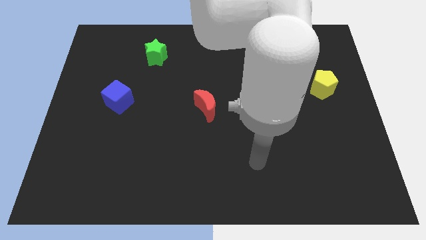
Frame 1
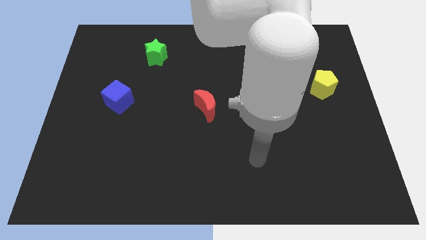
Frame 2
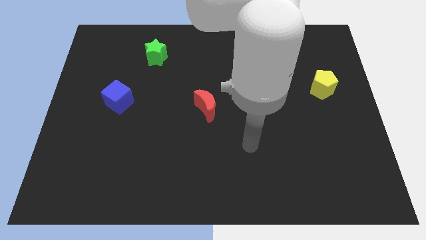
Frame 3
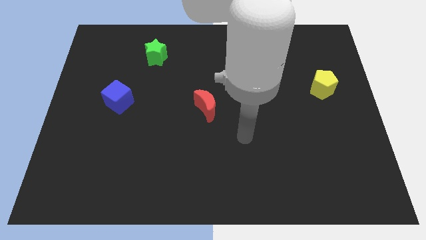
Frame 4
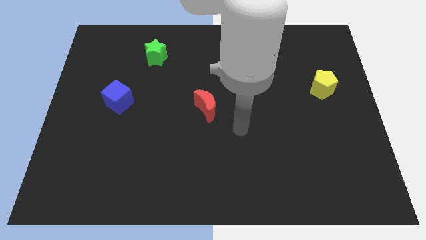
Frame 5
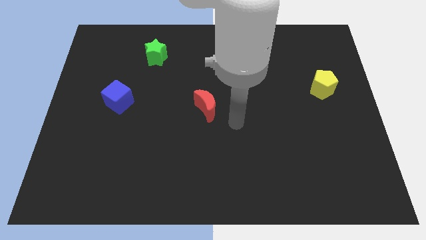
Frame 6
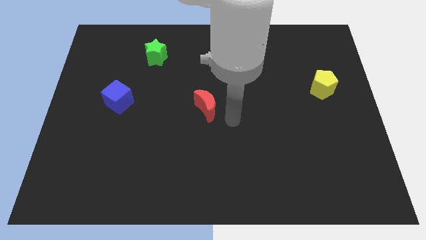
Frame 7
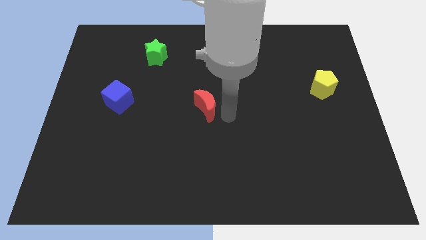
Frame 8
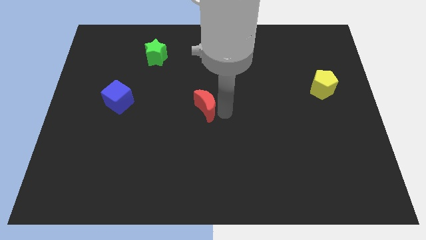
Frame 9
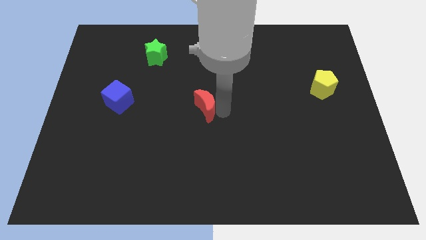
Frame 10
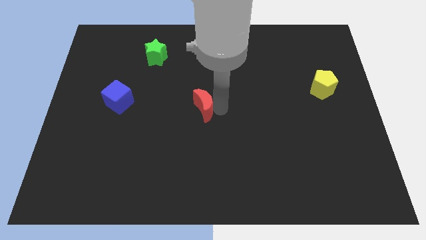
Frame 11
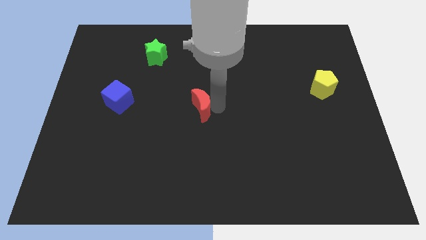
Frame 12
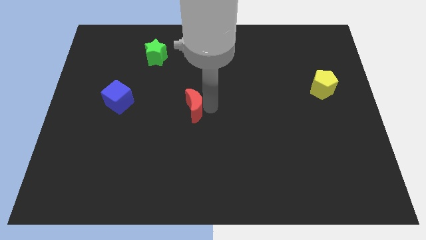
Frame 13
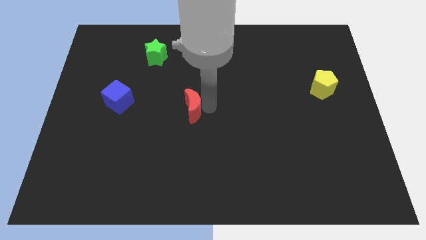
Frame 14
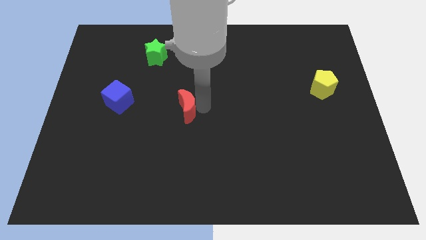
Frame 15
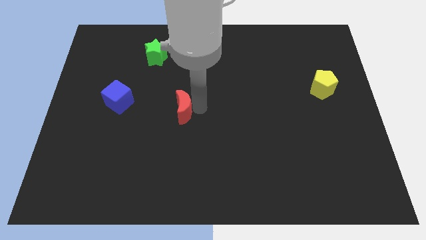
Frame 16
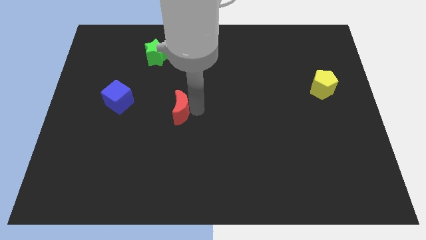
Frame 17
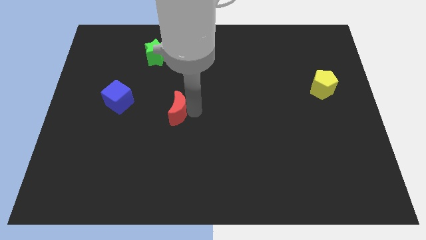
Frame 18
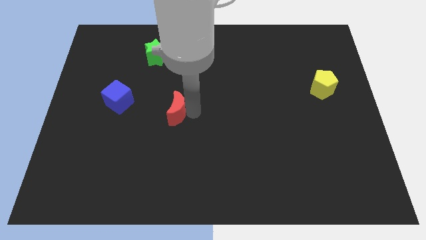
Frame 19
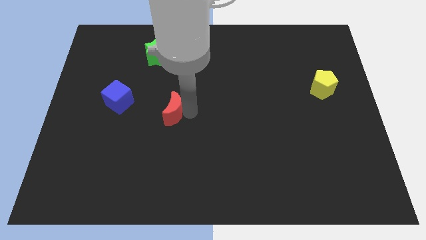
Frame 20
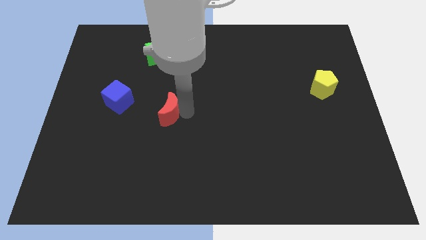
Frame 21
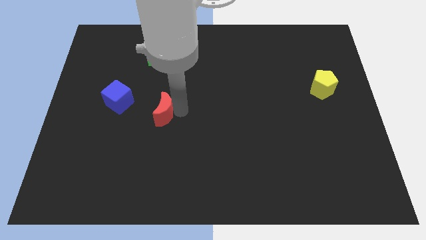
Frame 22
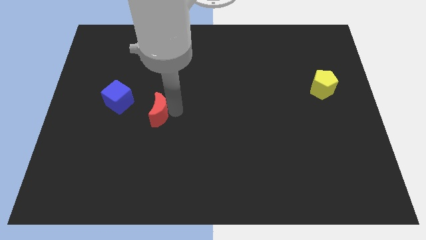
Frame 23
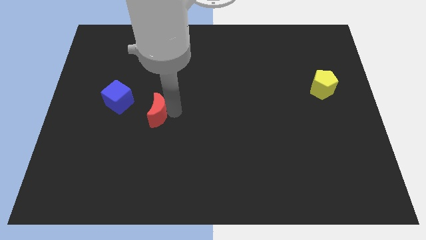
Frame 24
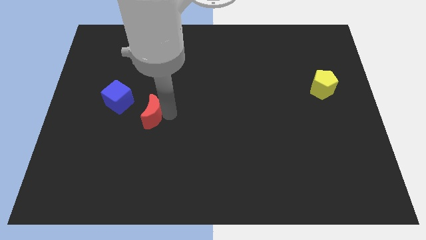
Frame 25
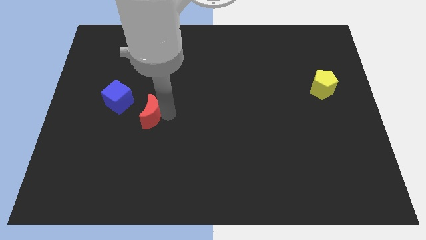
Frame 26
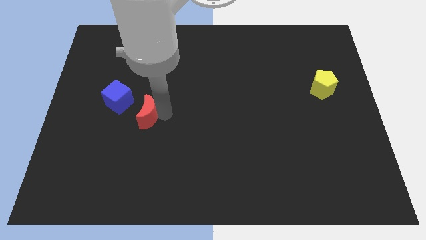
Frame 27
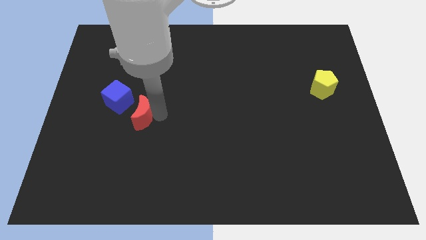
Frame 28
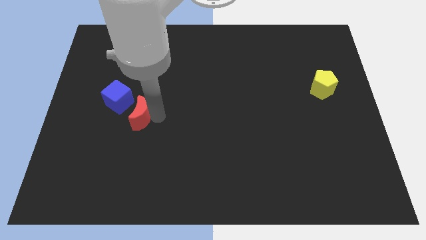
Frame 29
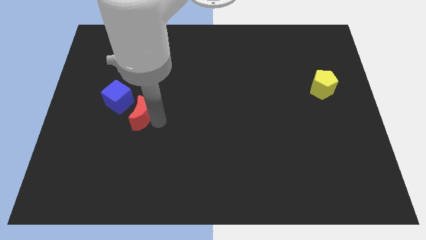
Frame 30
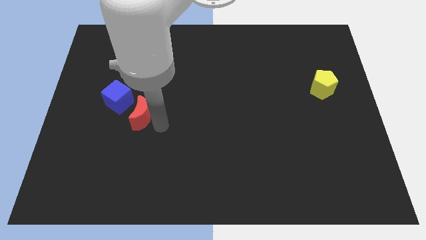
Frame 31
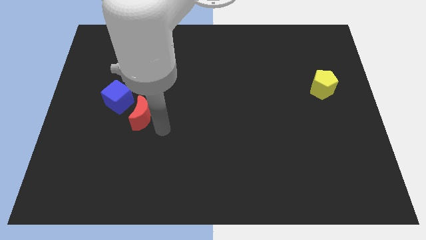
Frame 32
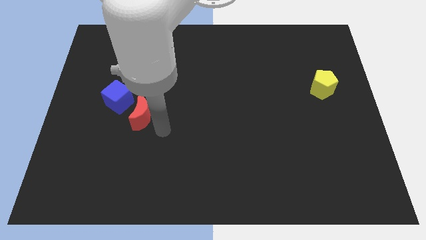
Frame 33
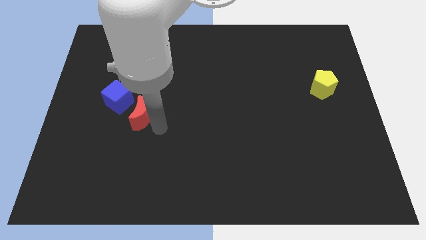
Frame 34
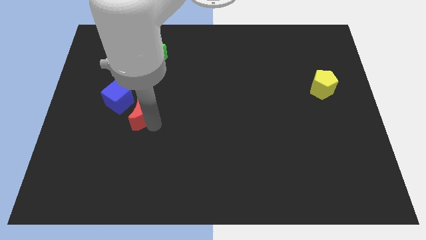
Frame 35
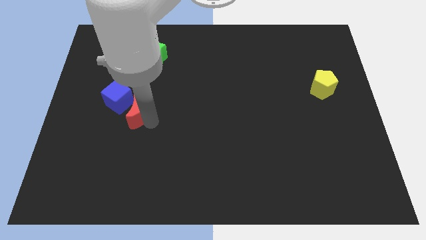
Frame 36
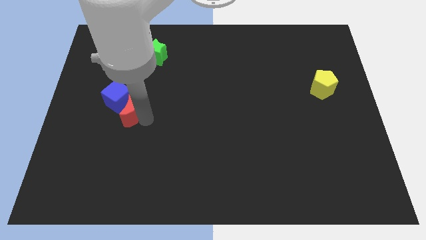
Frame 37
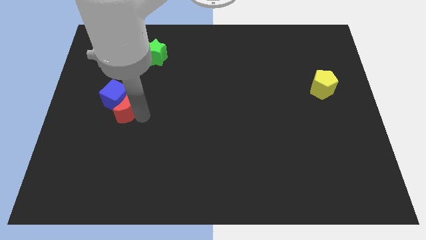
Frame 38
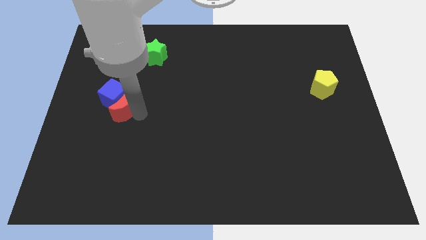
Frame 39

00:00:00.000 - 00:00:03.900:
slide the red moon to the blue block

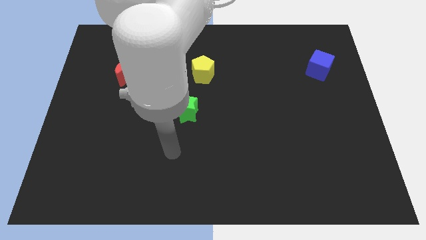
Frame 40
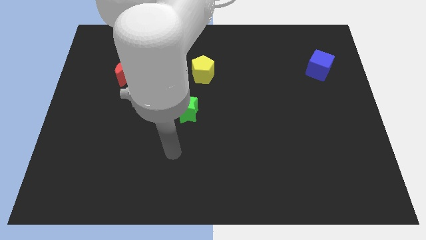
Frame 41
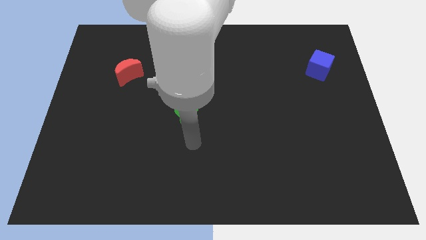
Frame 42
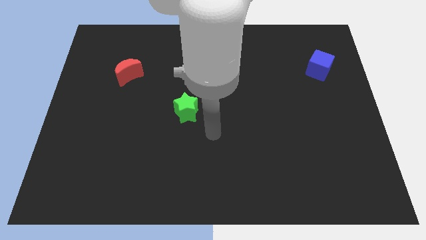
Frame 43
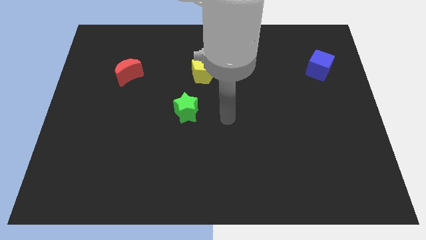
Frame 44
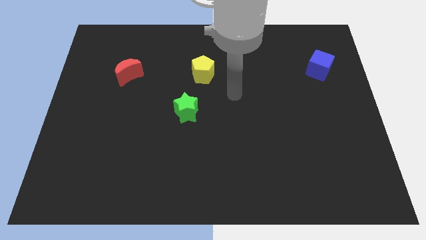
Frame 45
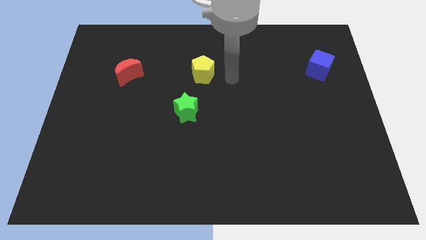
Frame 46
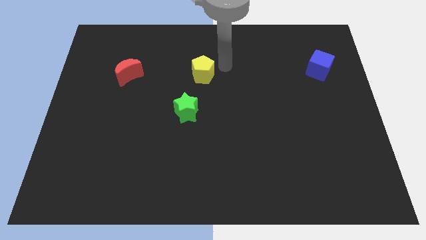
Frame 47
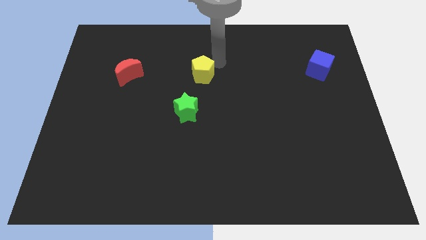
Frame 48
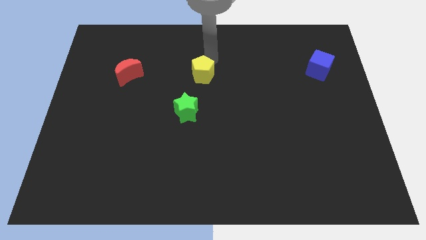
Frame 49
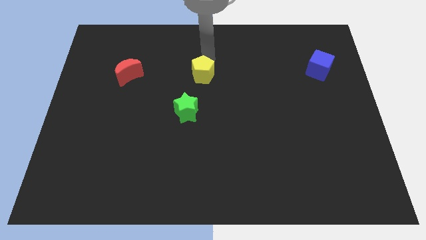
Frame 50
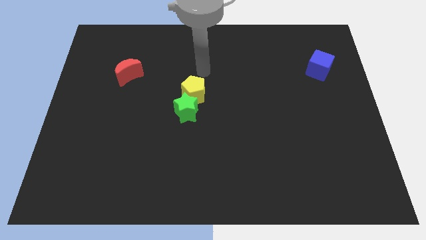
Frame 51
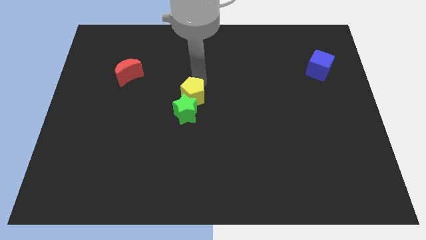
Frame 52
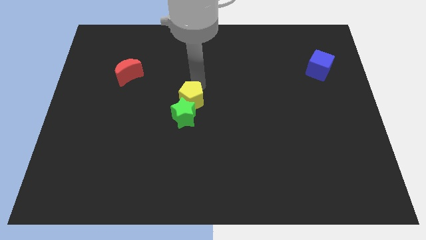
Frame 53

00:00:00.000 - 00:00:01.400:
move the yellow block towards the green star

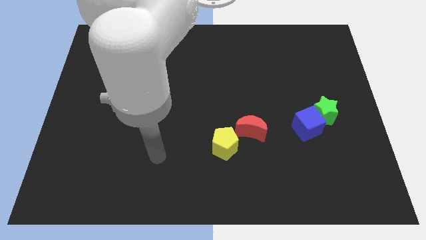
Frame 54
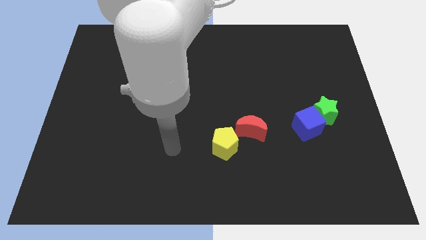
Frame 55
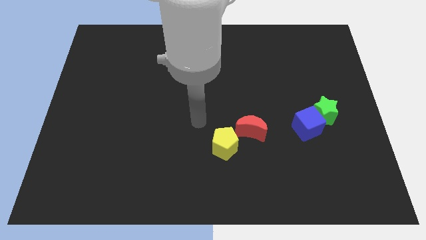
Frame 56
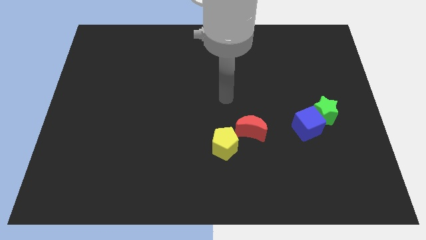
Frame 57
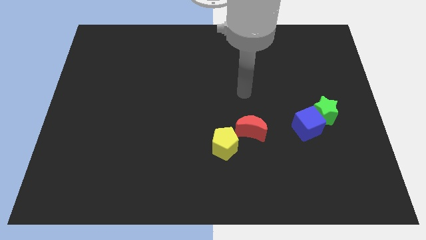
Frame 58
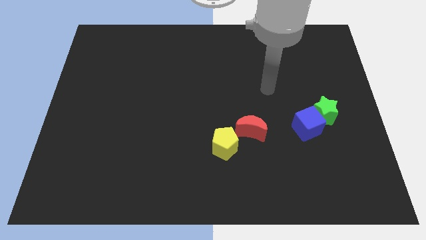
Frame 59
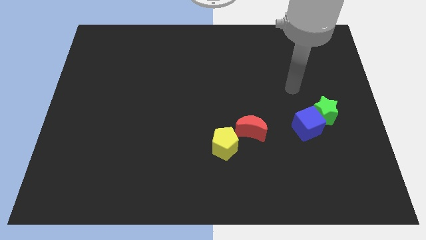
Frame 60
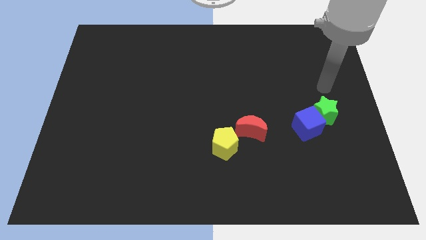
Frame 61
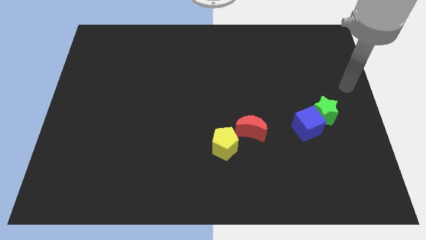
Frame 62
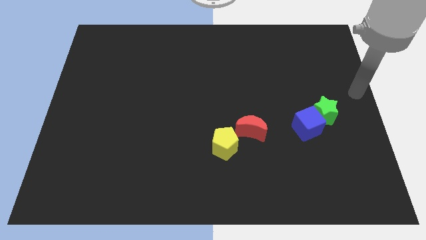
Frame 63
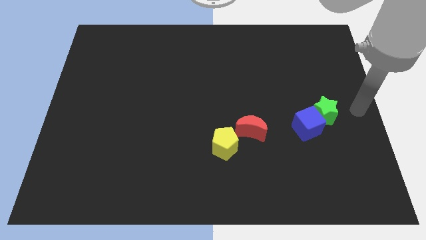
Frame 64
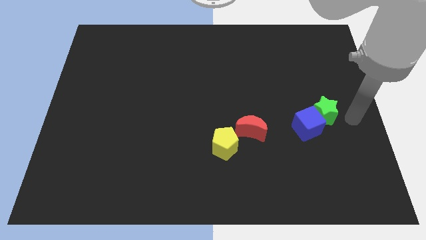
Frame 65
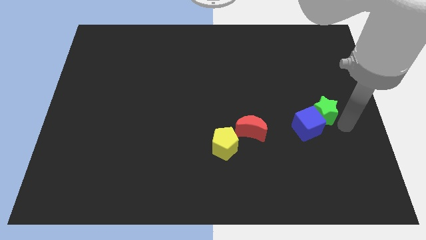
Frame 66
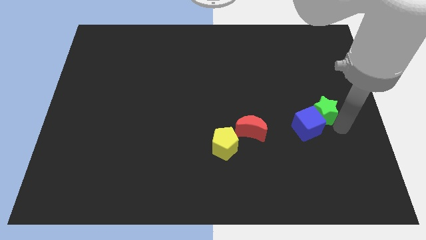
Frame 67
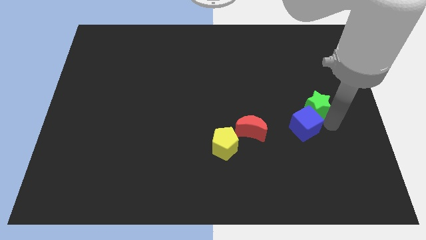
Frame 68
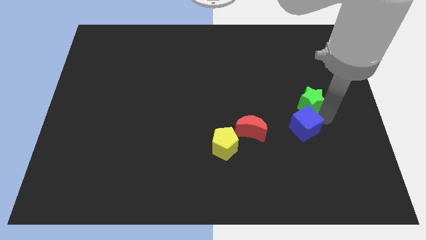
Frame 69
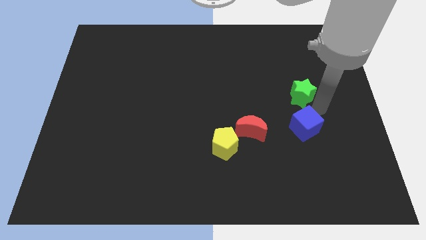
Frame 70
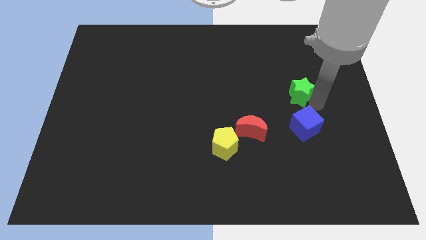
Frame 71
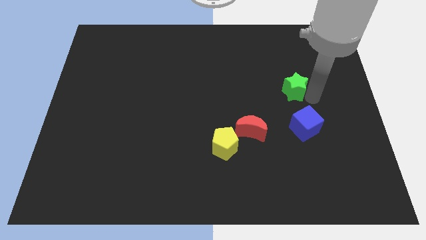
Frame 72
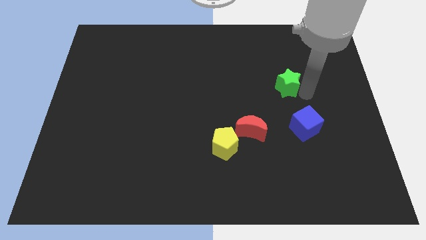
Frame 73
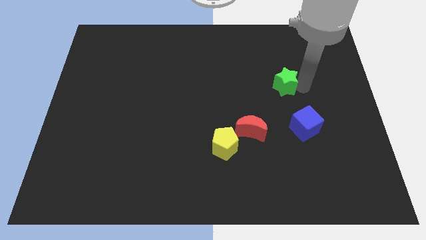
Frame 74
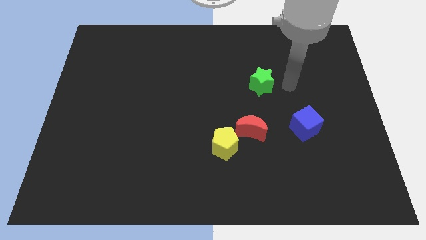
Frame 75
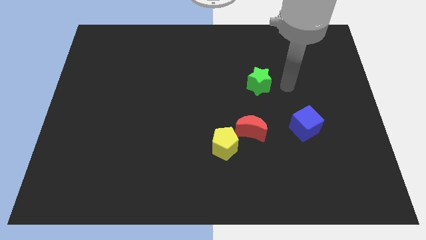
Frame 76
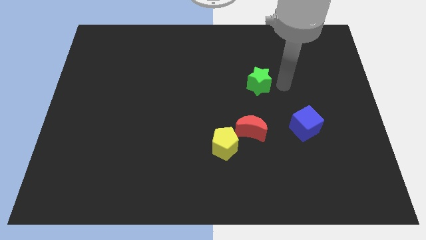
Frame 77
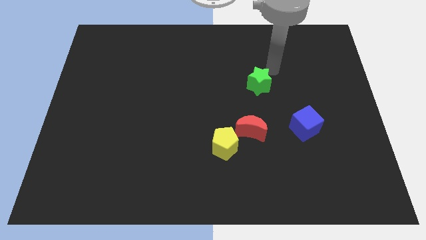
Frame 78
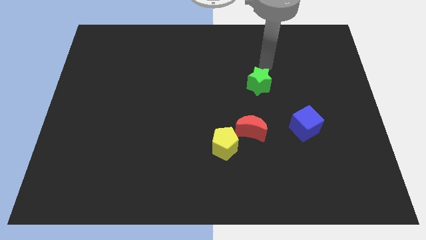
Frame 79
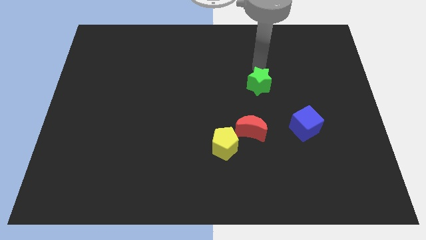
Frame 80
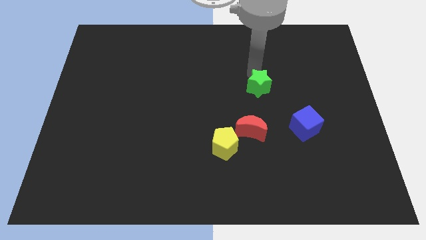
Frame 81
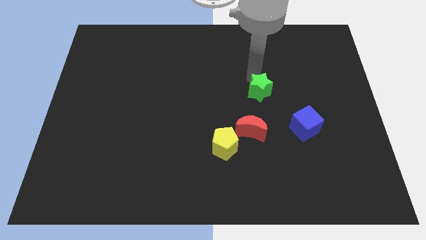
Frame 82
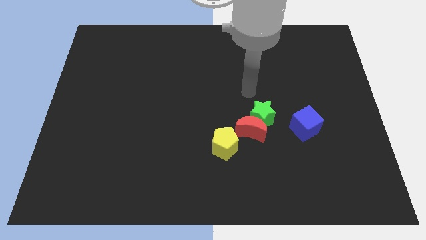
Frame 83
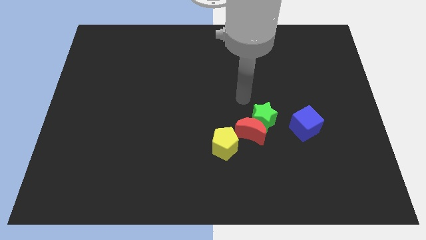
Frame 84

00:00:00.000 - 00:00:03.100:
push the green star next to the red block

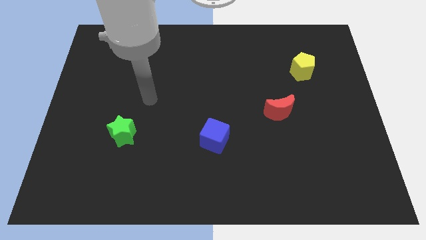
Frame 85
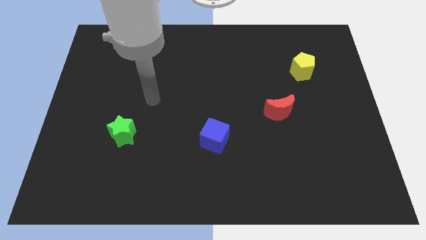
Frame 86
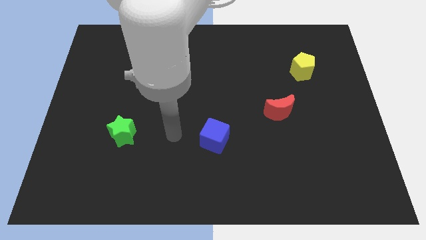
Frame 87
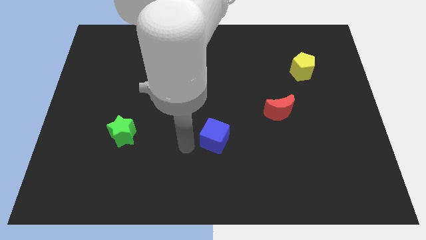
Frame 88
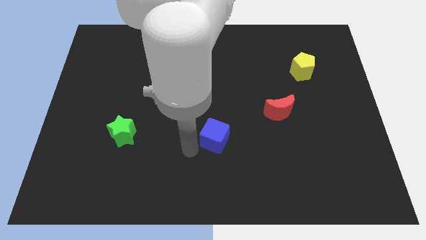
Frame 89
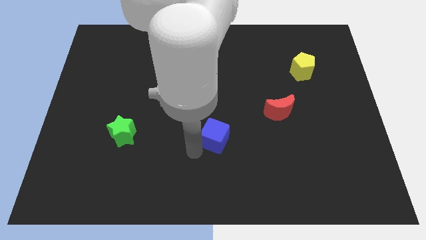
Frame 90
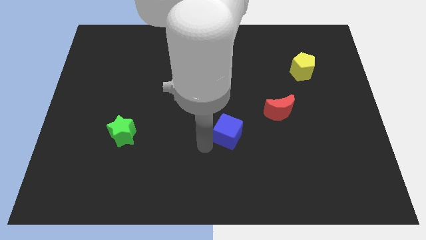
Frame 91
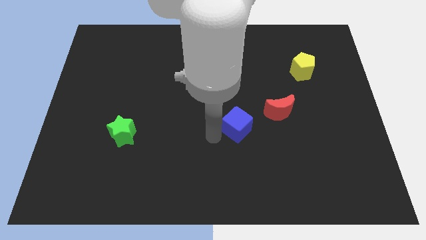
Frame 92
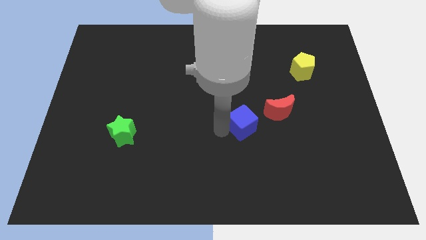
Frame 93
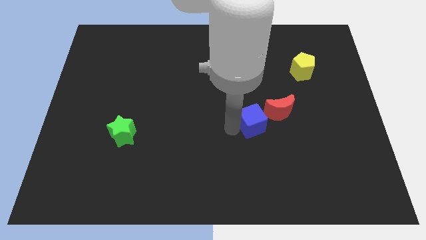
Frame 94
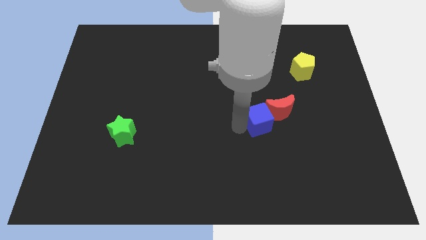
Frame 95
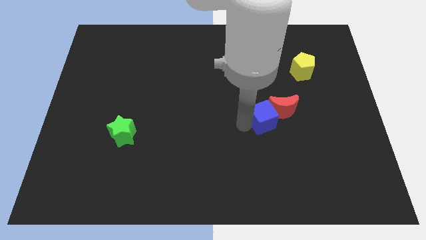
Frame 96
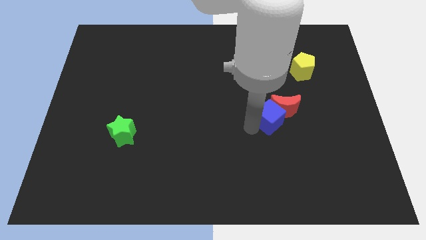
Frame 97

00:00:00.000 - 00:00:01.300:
push the cube close to the red moon
